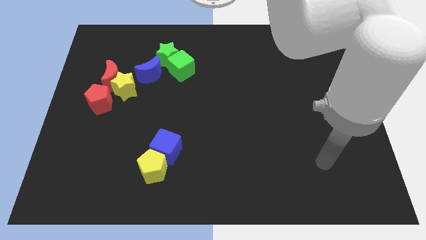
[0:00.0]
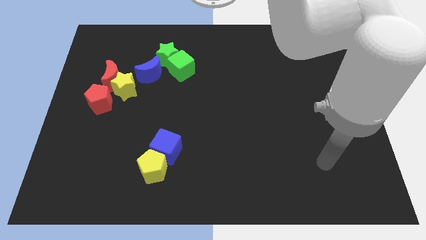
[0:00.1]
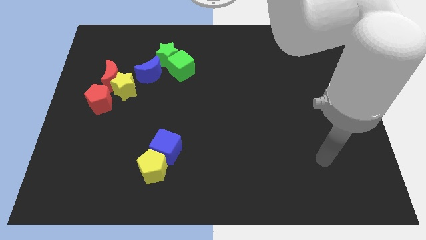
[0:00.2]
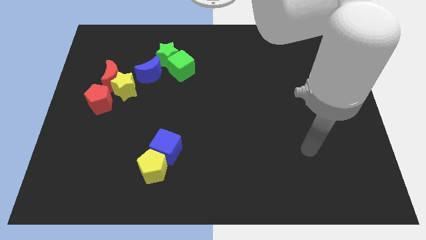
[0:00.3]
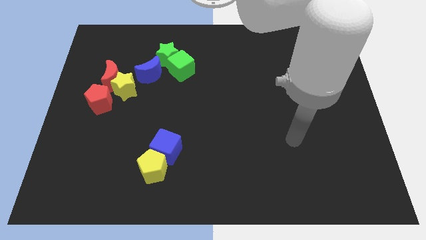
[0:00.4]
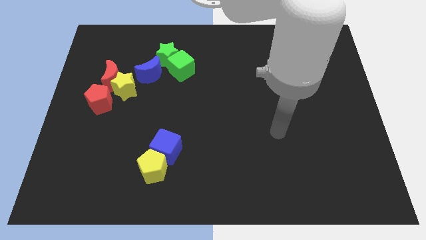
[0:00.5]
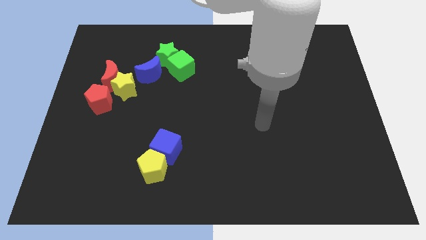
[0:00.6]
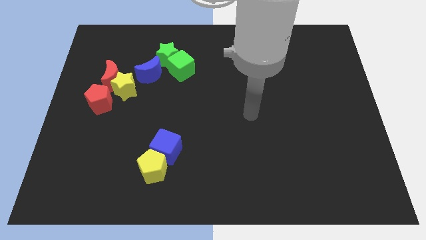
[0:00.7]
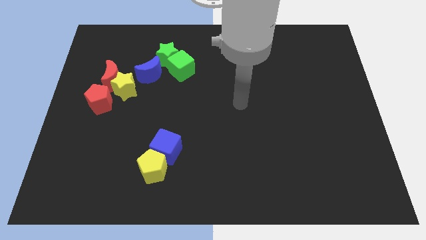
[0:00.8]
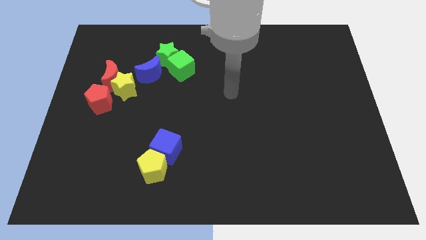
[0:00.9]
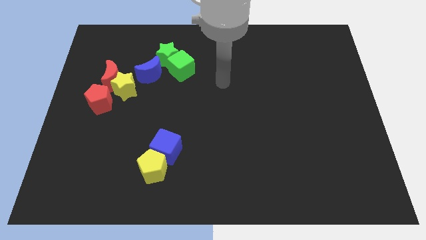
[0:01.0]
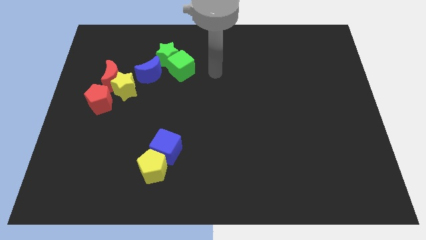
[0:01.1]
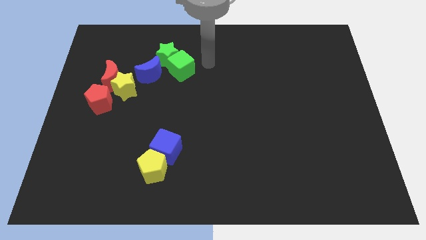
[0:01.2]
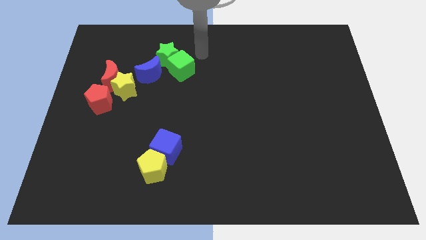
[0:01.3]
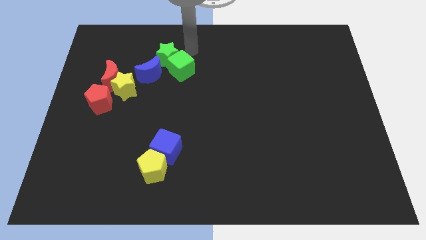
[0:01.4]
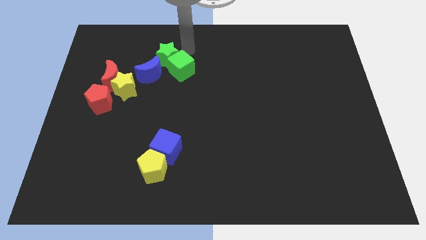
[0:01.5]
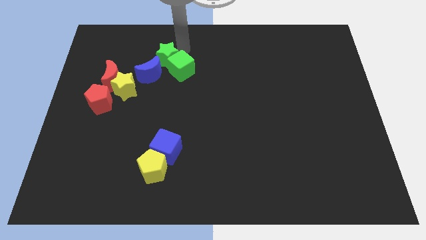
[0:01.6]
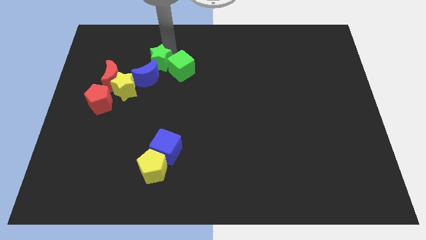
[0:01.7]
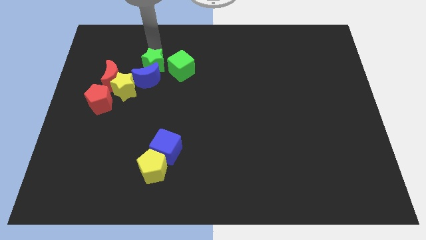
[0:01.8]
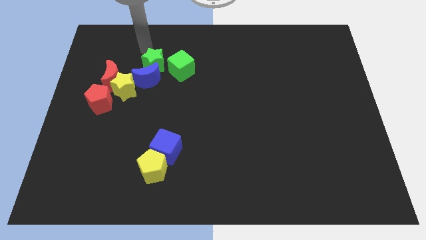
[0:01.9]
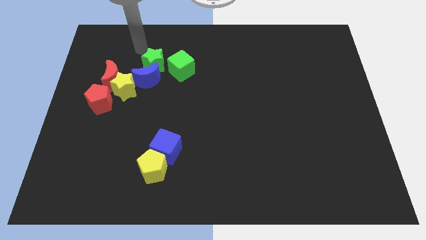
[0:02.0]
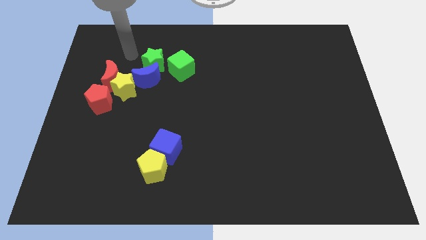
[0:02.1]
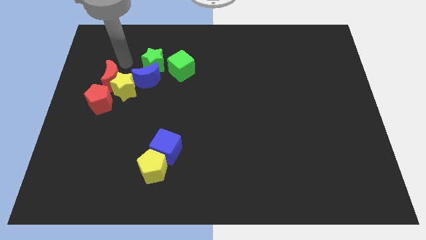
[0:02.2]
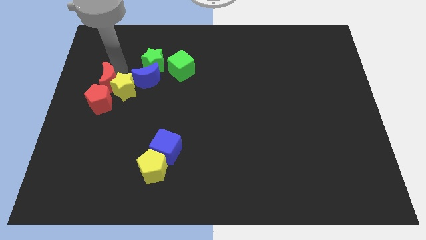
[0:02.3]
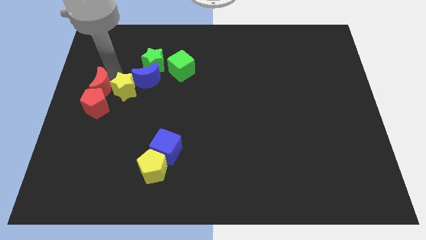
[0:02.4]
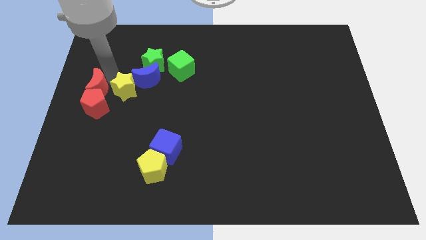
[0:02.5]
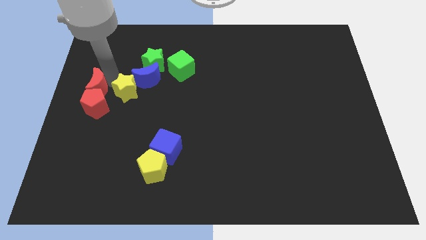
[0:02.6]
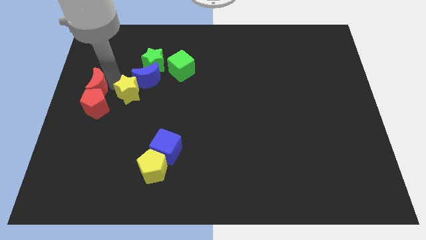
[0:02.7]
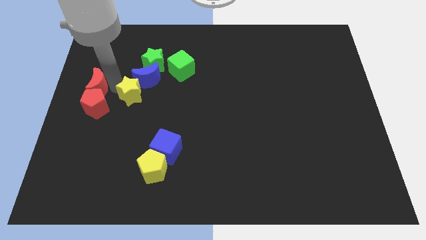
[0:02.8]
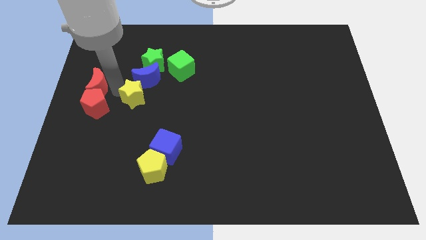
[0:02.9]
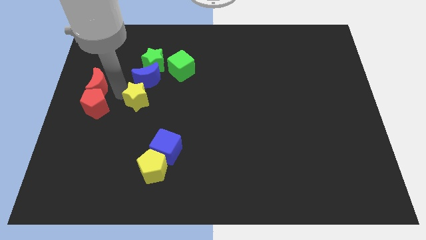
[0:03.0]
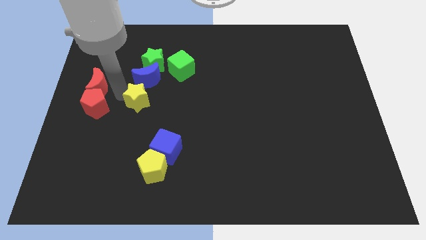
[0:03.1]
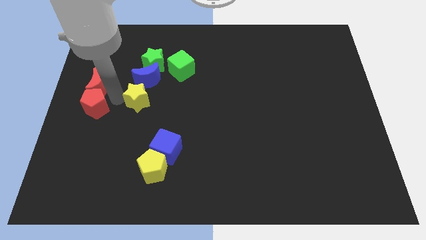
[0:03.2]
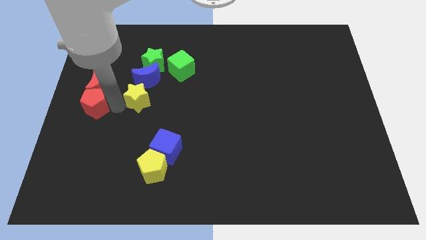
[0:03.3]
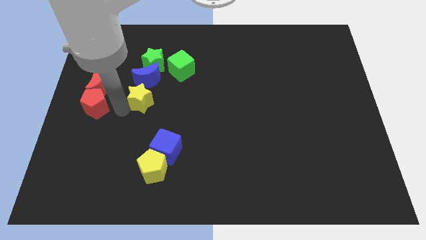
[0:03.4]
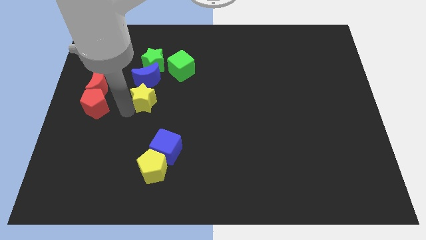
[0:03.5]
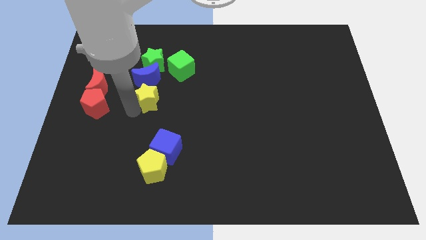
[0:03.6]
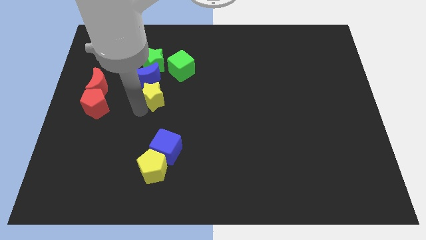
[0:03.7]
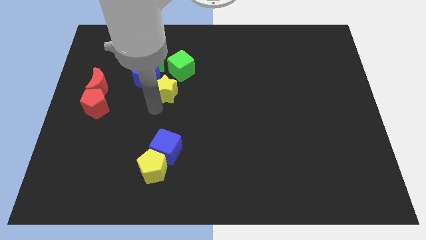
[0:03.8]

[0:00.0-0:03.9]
push the yellow star slightly to the right

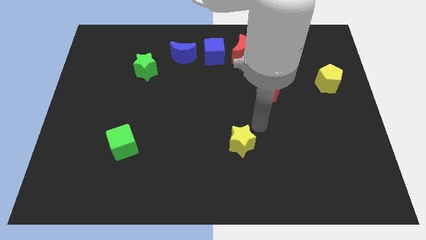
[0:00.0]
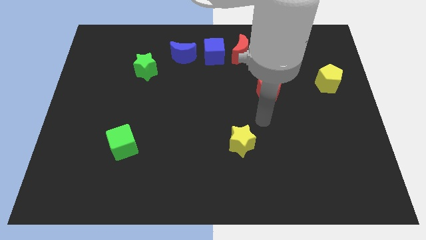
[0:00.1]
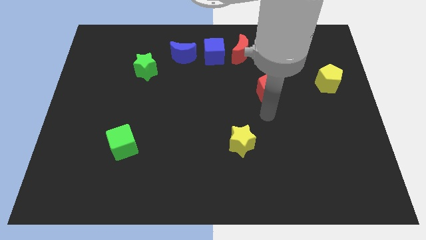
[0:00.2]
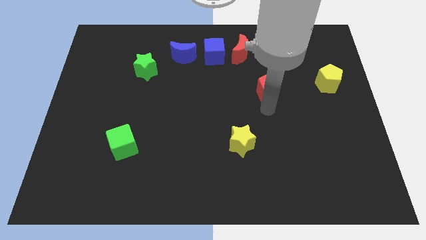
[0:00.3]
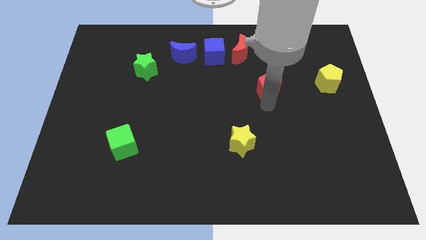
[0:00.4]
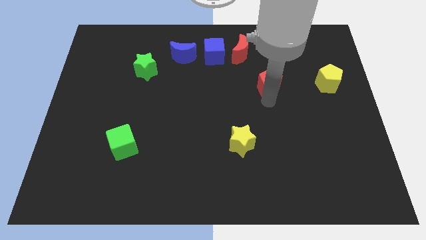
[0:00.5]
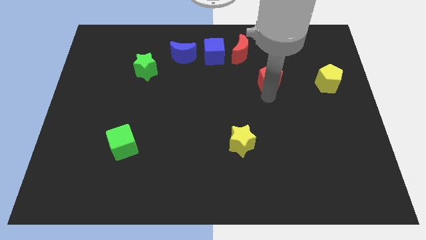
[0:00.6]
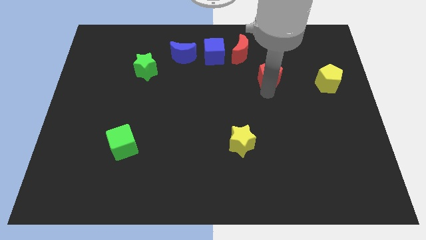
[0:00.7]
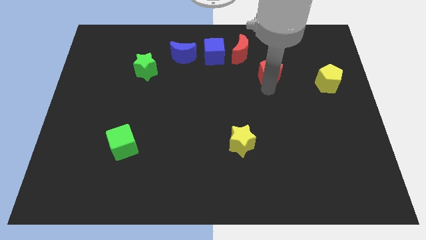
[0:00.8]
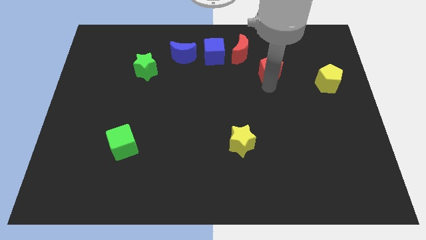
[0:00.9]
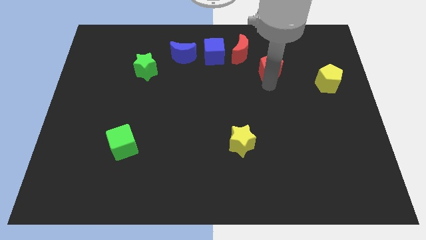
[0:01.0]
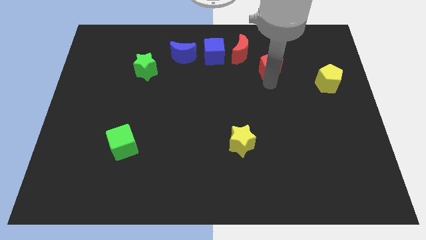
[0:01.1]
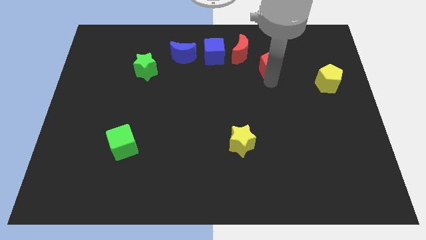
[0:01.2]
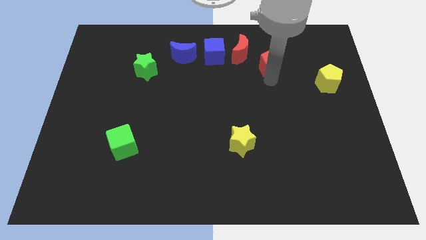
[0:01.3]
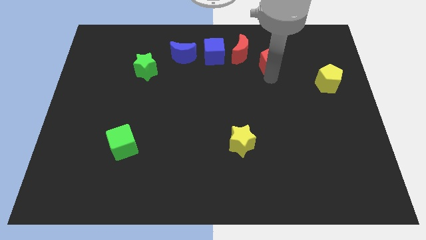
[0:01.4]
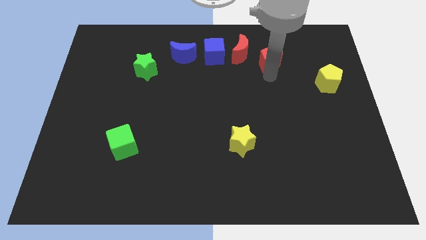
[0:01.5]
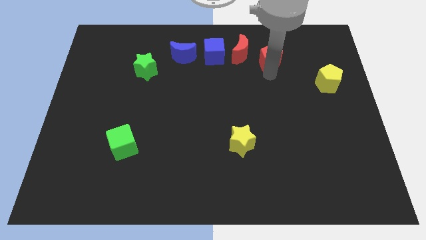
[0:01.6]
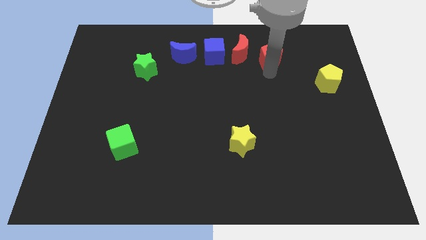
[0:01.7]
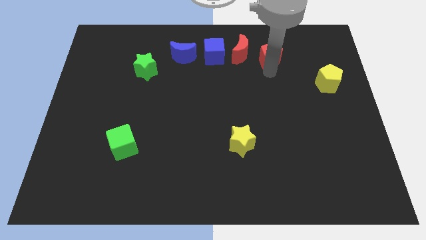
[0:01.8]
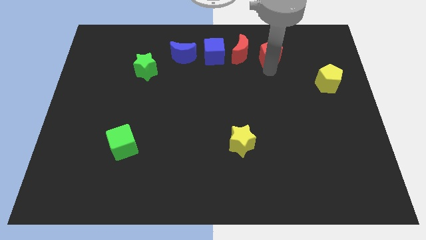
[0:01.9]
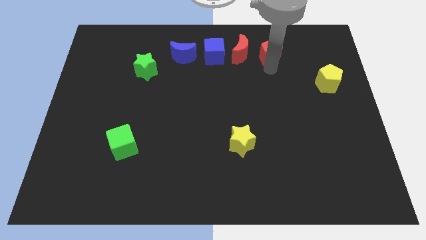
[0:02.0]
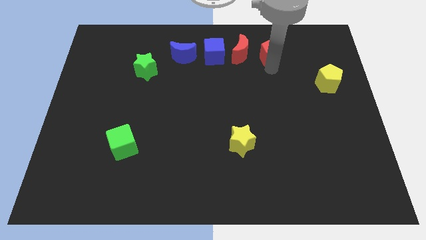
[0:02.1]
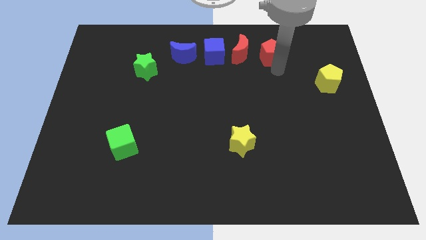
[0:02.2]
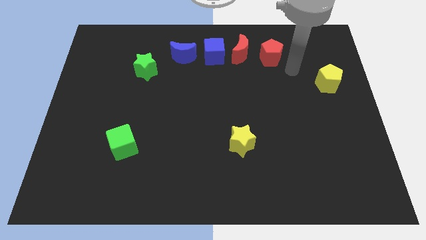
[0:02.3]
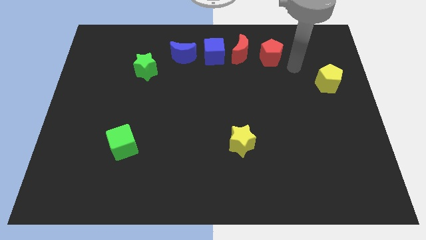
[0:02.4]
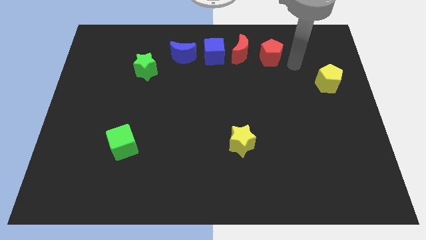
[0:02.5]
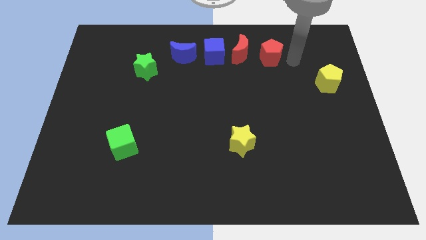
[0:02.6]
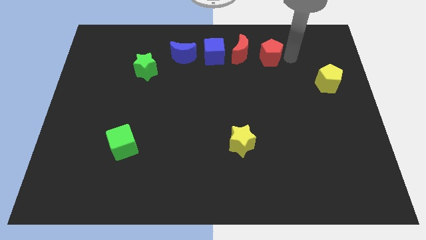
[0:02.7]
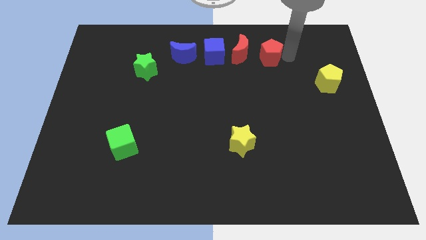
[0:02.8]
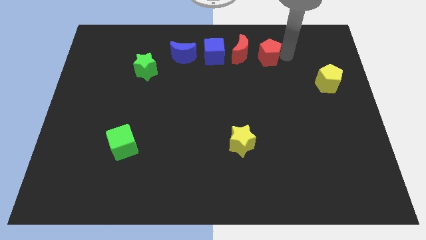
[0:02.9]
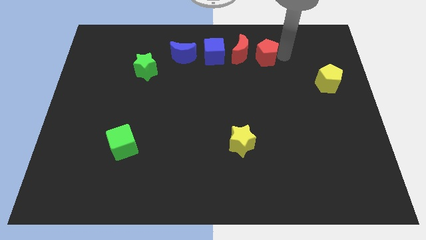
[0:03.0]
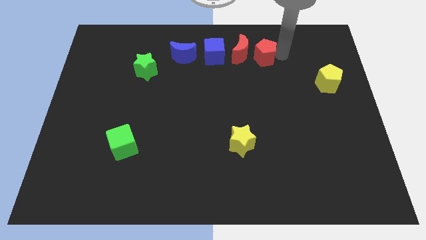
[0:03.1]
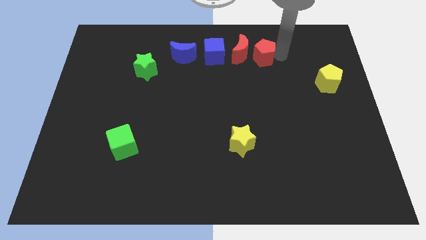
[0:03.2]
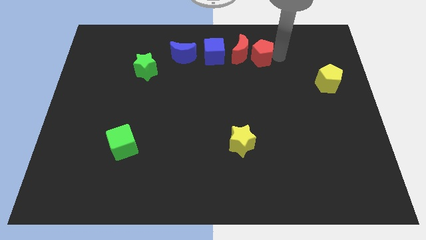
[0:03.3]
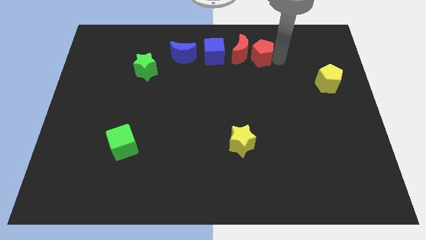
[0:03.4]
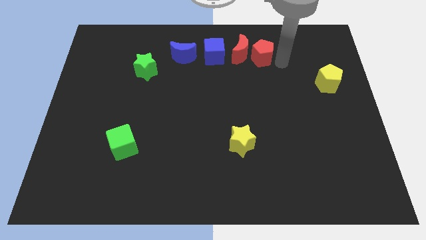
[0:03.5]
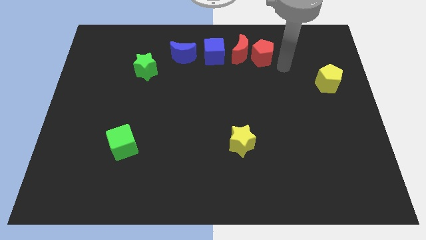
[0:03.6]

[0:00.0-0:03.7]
move the red pentagon to the right of the red crescent

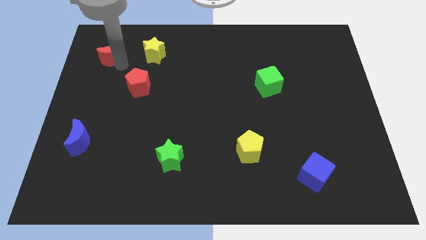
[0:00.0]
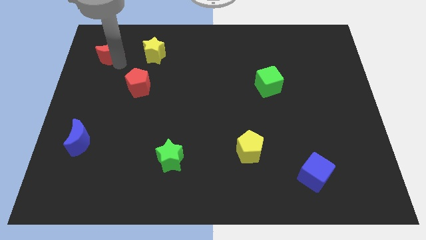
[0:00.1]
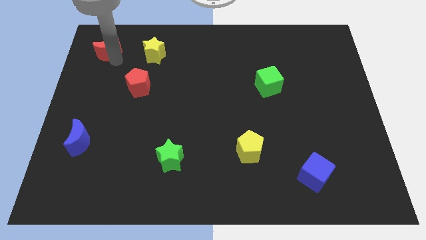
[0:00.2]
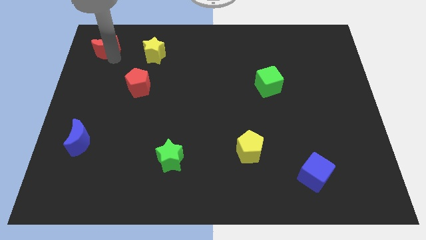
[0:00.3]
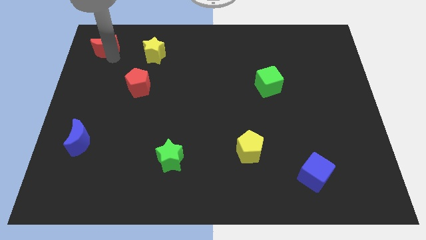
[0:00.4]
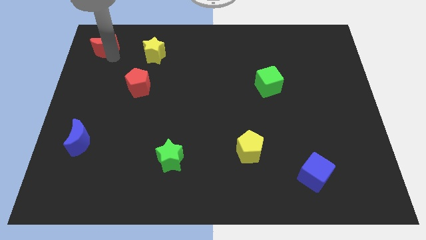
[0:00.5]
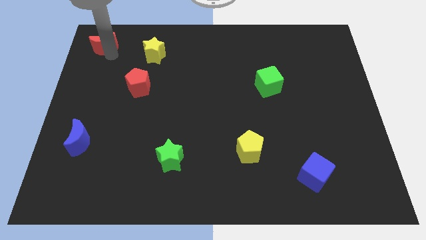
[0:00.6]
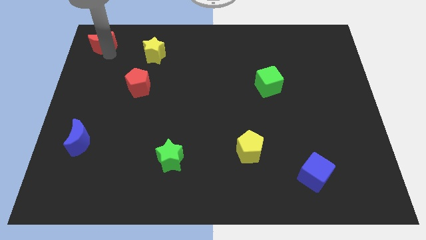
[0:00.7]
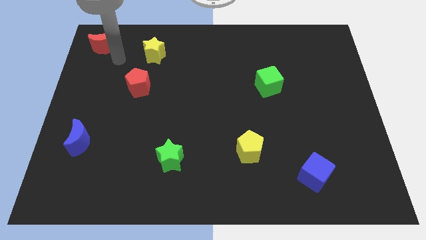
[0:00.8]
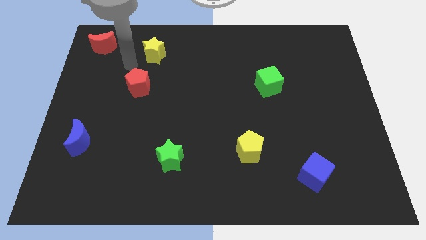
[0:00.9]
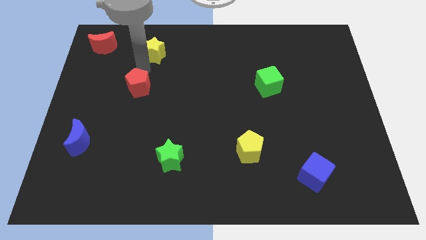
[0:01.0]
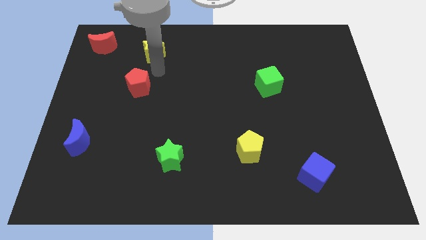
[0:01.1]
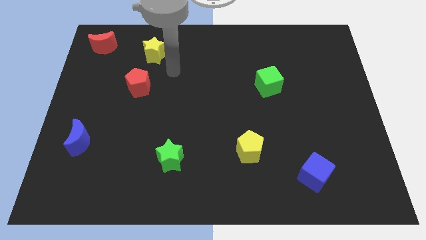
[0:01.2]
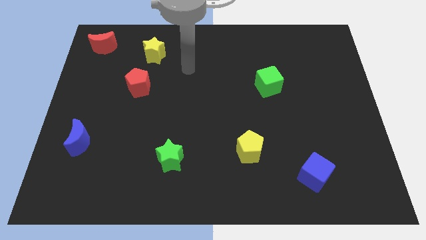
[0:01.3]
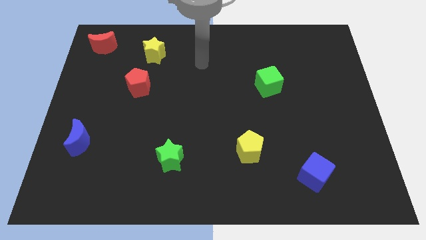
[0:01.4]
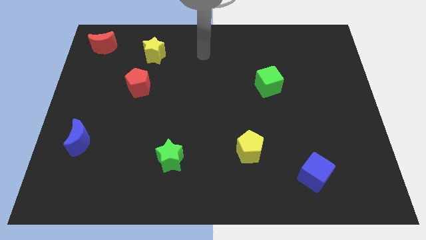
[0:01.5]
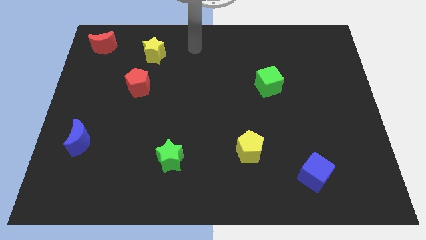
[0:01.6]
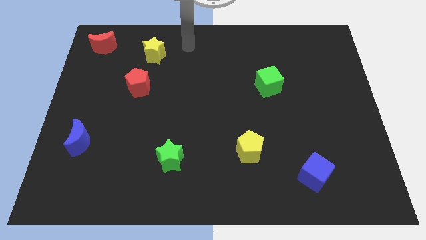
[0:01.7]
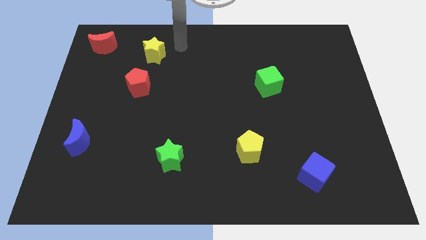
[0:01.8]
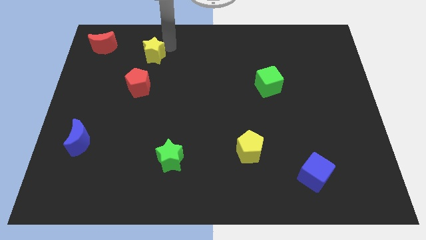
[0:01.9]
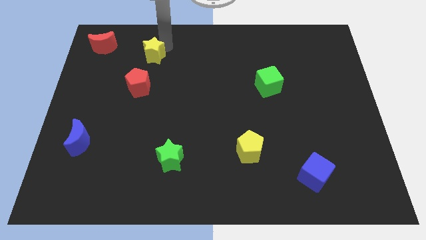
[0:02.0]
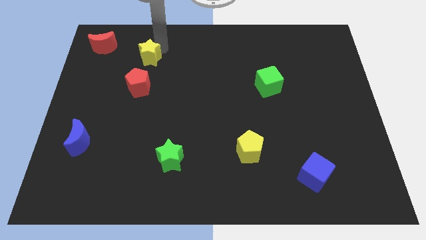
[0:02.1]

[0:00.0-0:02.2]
place your arm on the top right of yellow star
